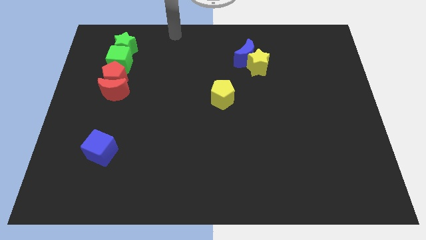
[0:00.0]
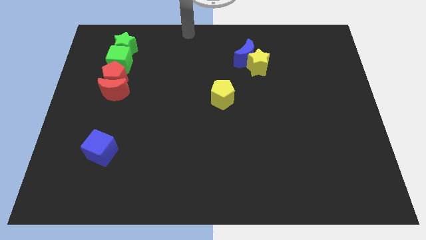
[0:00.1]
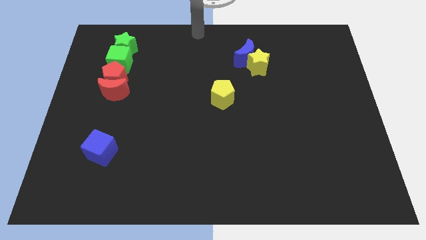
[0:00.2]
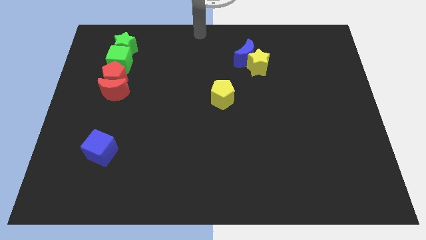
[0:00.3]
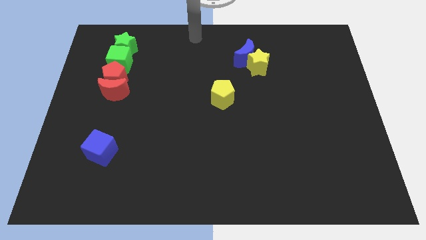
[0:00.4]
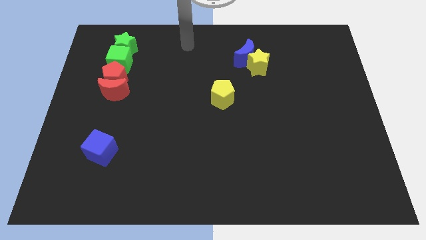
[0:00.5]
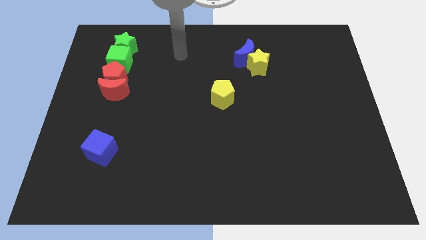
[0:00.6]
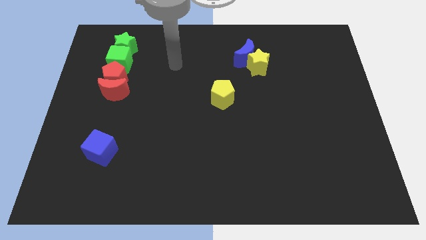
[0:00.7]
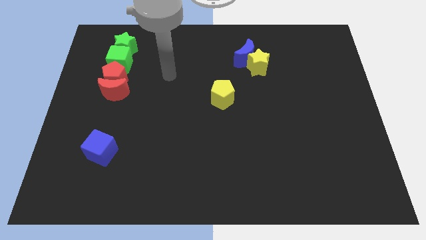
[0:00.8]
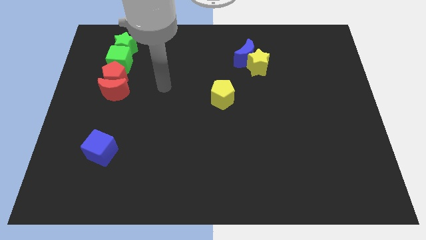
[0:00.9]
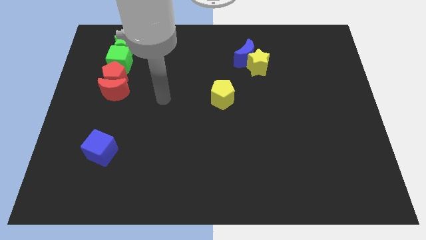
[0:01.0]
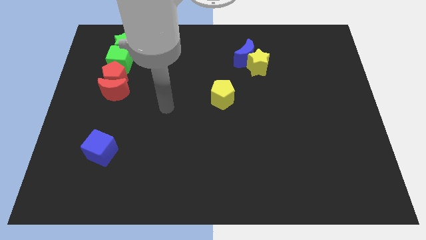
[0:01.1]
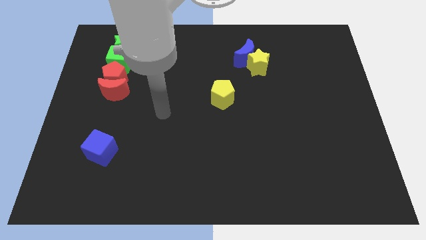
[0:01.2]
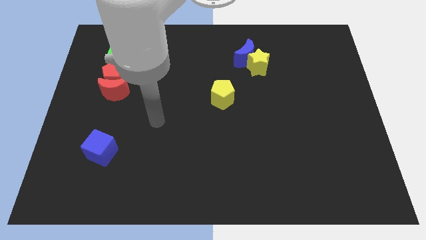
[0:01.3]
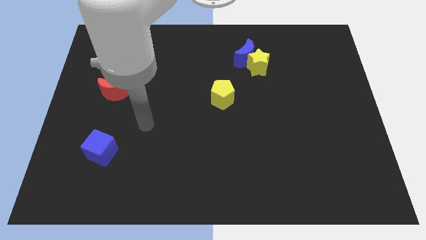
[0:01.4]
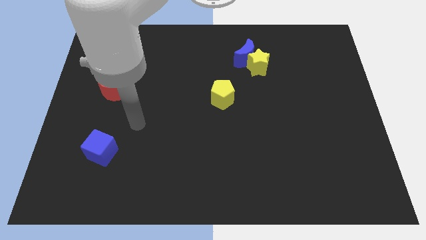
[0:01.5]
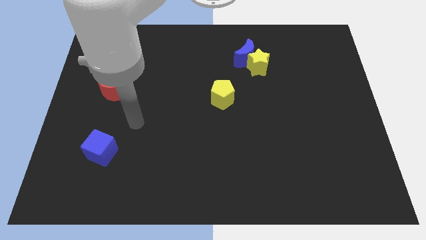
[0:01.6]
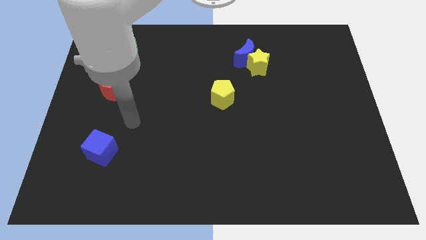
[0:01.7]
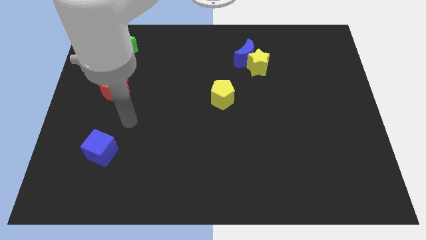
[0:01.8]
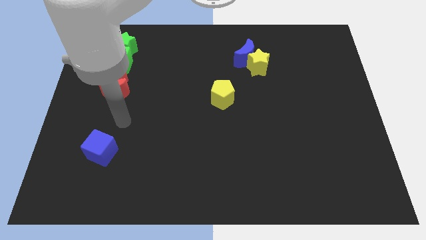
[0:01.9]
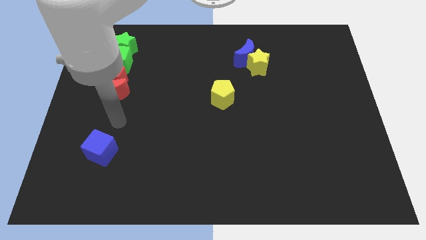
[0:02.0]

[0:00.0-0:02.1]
move your arm to the bottom of the red crescent

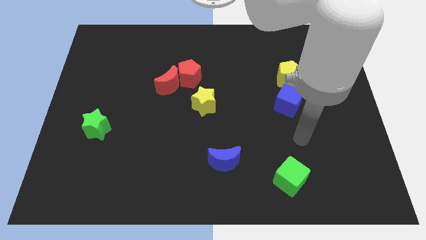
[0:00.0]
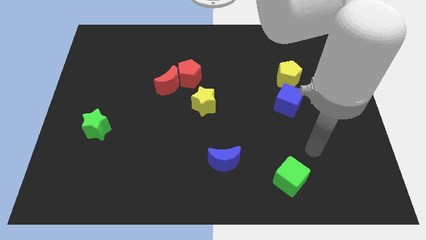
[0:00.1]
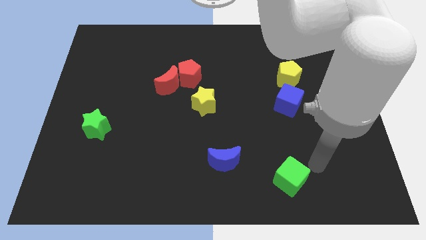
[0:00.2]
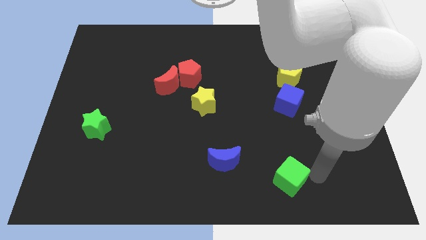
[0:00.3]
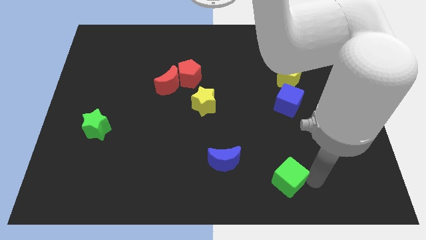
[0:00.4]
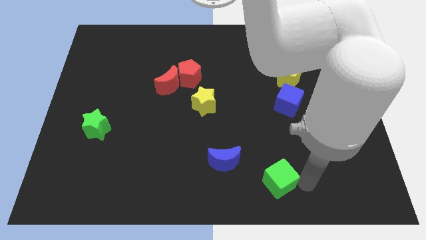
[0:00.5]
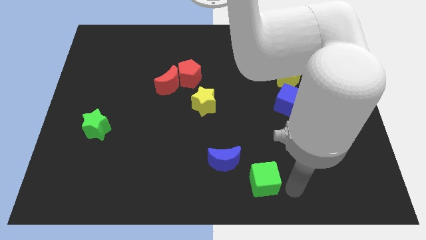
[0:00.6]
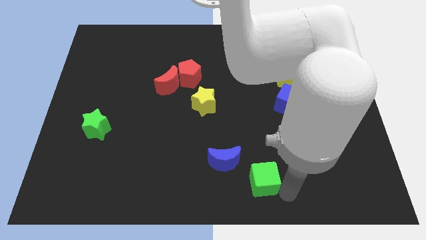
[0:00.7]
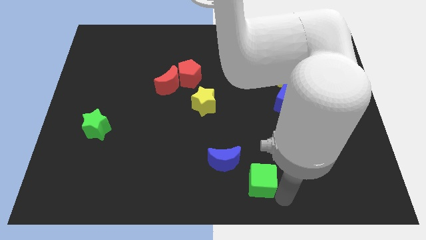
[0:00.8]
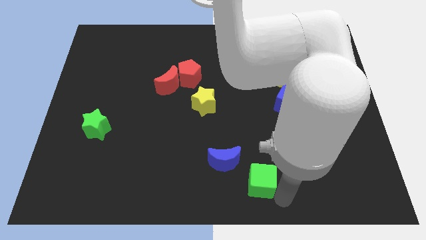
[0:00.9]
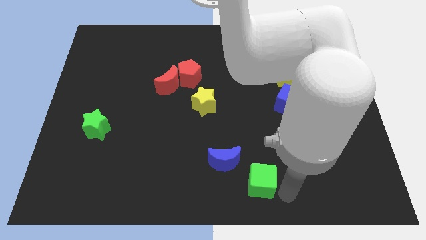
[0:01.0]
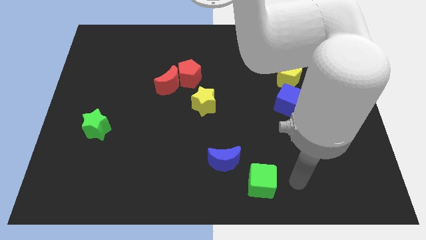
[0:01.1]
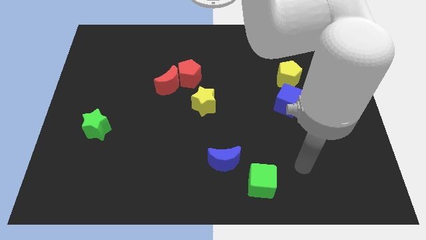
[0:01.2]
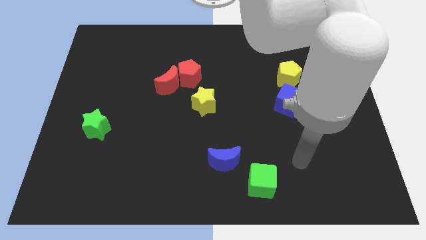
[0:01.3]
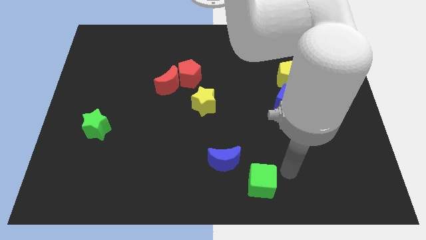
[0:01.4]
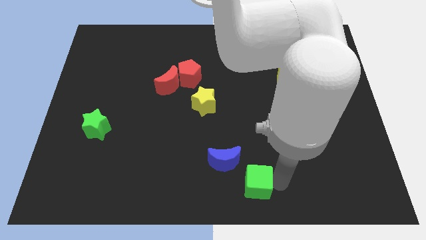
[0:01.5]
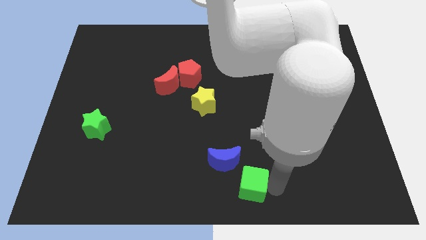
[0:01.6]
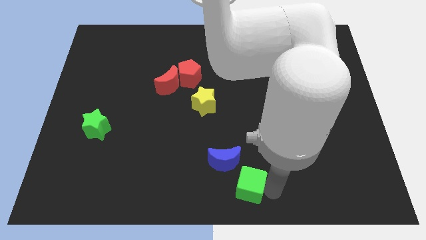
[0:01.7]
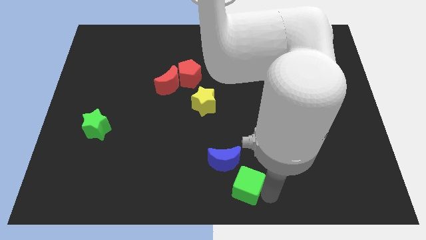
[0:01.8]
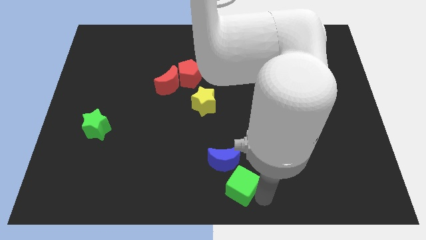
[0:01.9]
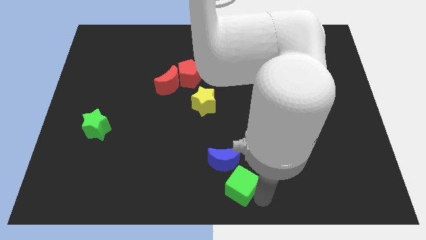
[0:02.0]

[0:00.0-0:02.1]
place the green cube at the bottom of the blue moon

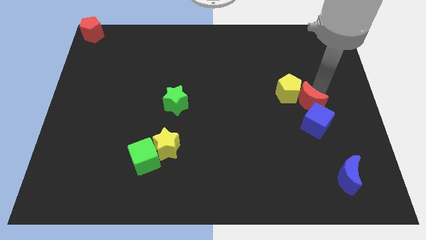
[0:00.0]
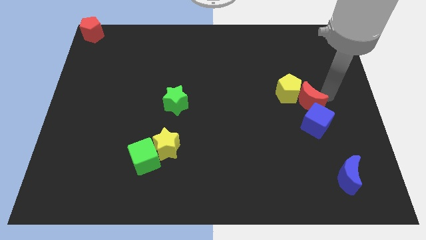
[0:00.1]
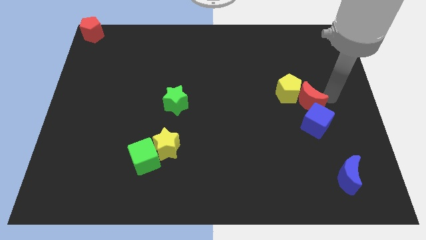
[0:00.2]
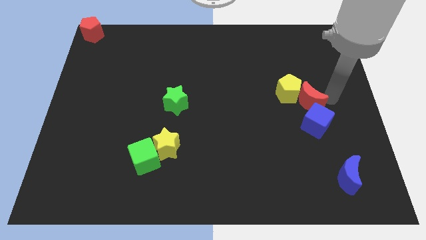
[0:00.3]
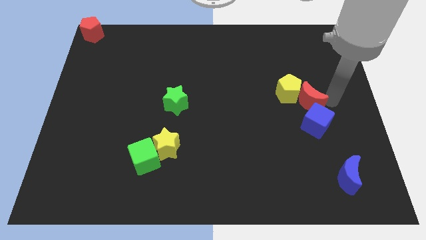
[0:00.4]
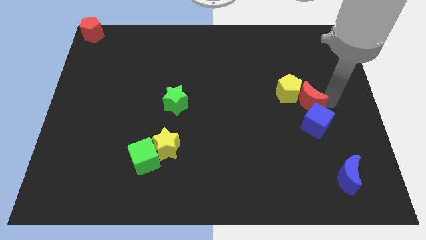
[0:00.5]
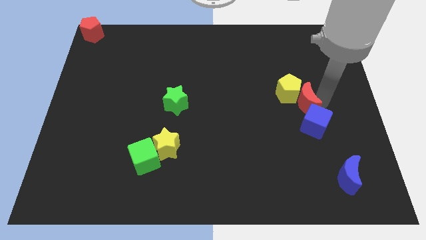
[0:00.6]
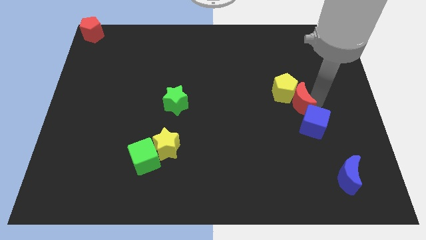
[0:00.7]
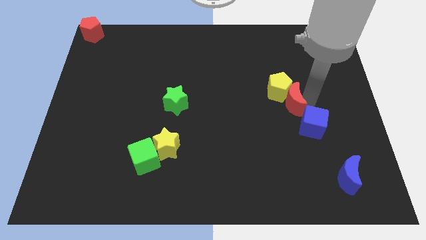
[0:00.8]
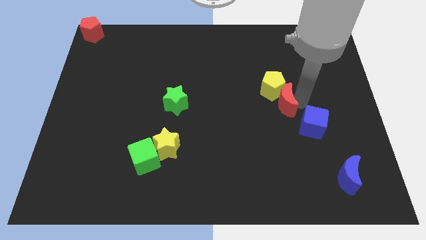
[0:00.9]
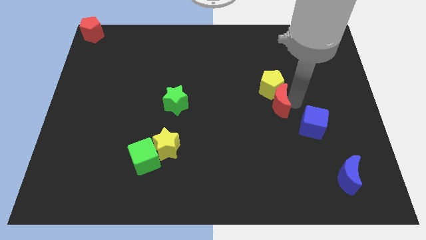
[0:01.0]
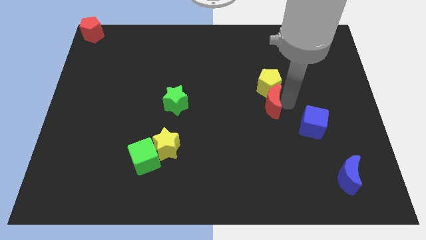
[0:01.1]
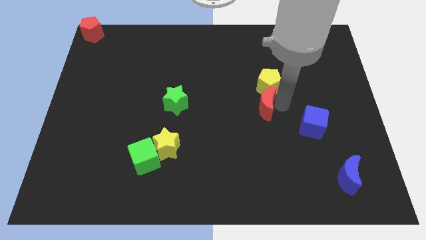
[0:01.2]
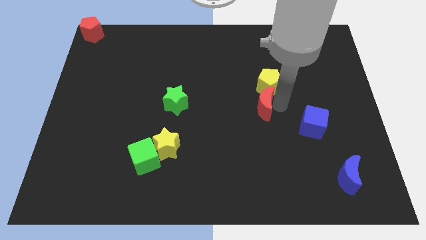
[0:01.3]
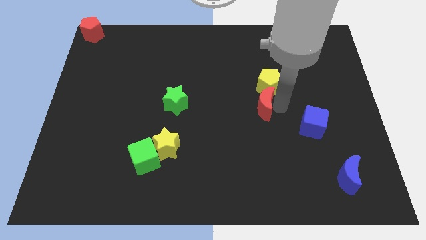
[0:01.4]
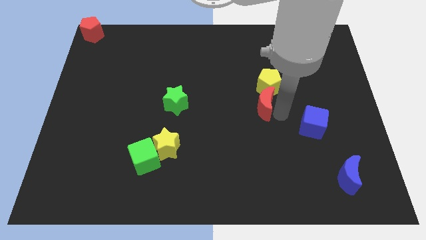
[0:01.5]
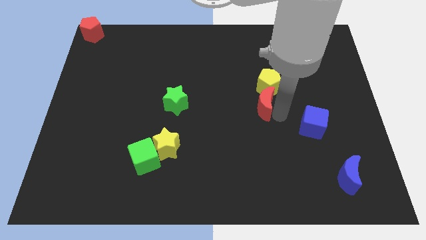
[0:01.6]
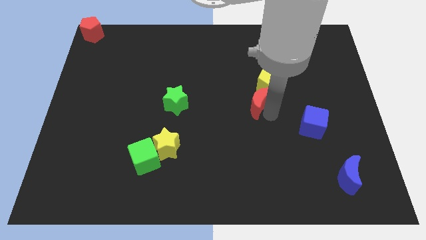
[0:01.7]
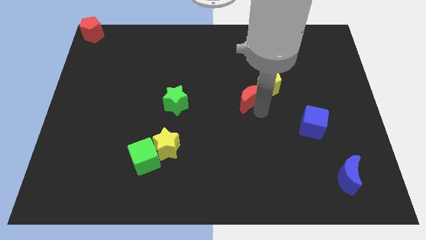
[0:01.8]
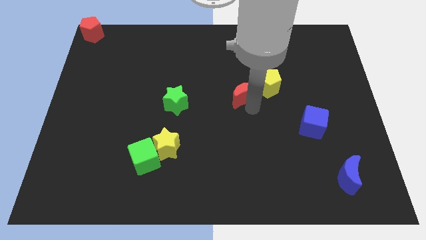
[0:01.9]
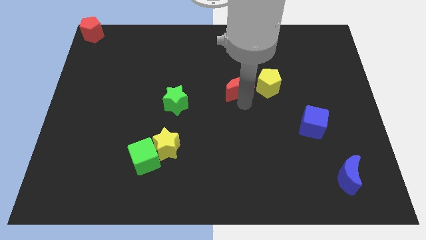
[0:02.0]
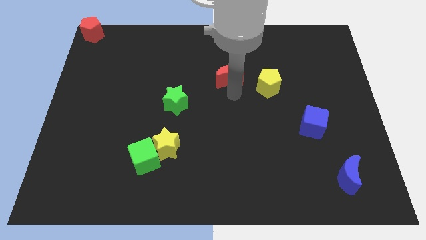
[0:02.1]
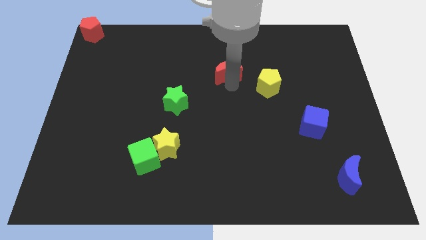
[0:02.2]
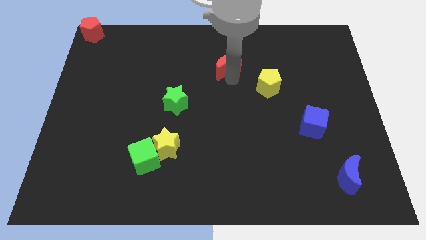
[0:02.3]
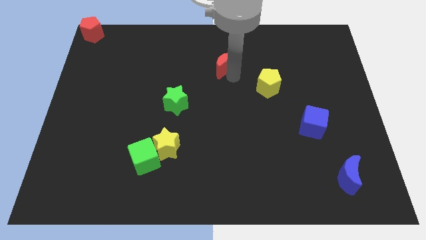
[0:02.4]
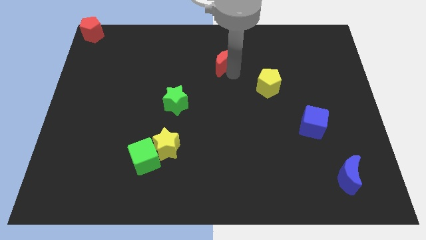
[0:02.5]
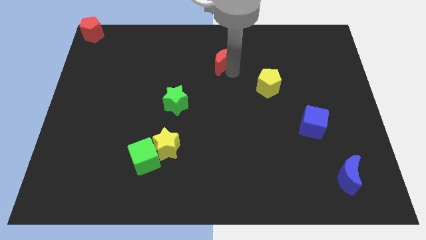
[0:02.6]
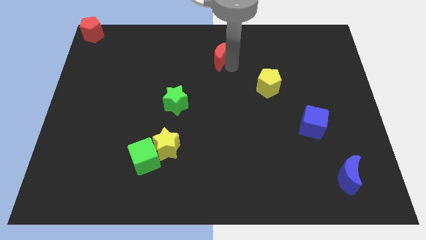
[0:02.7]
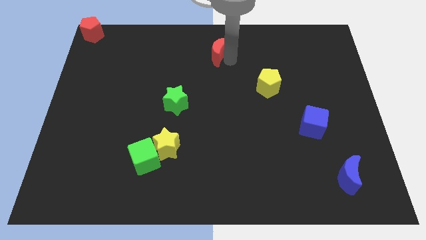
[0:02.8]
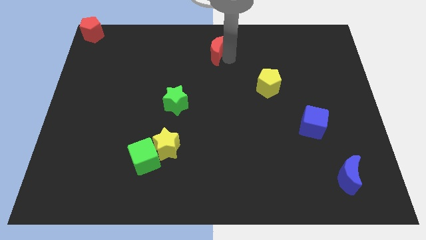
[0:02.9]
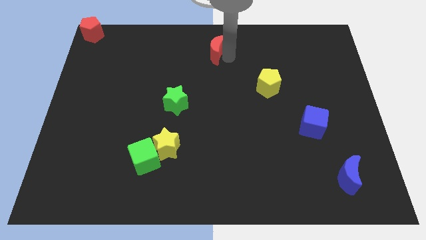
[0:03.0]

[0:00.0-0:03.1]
separate red moon from yellow pentagon

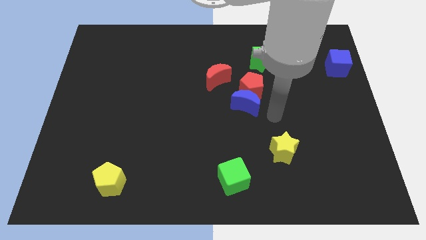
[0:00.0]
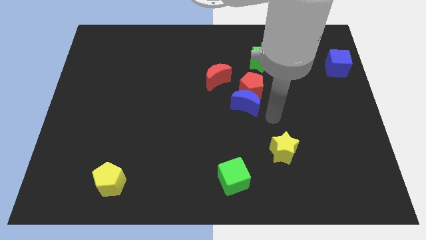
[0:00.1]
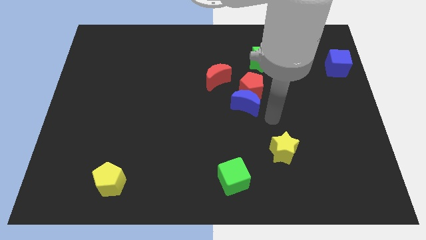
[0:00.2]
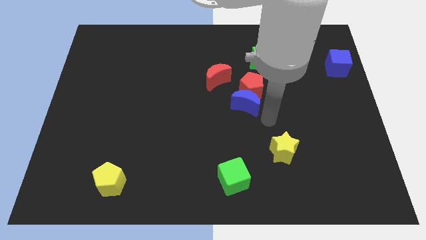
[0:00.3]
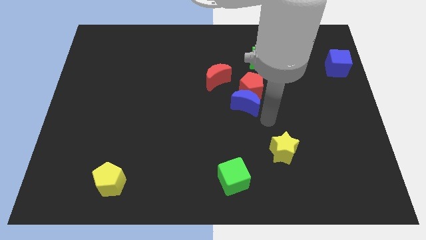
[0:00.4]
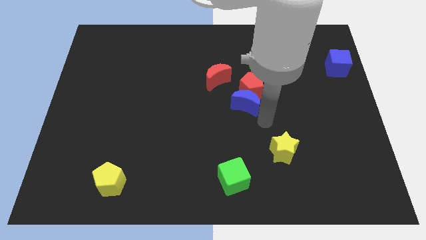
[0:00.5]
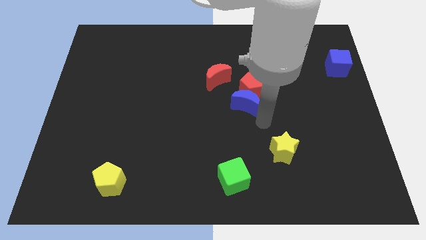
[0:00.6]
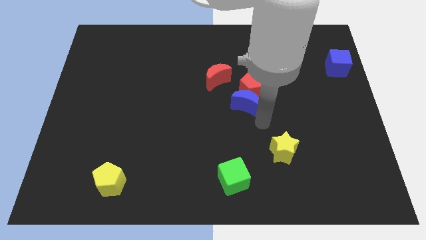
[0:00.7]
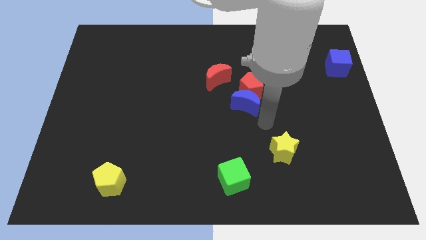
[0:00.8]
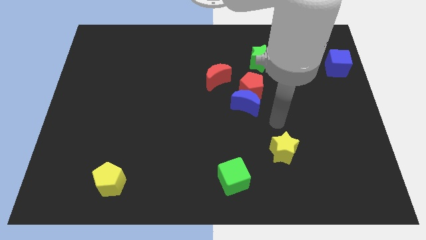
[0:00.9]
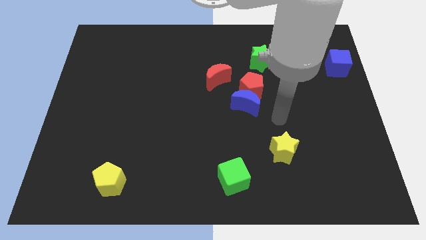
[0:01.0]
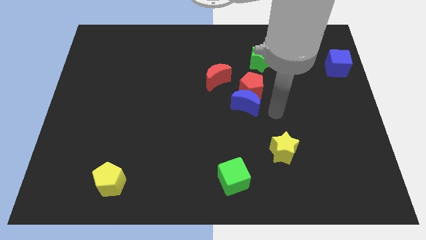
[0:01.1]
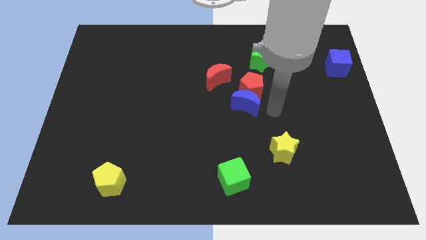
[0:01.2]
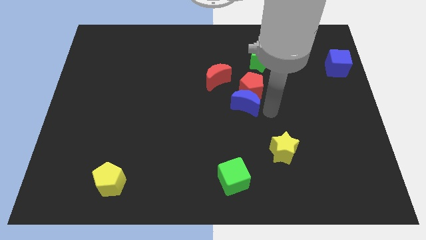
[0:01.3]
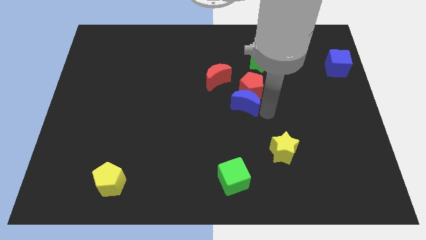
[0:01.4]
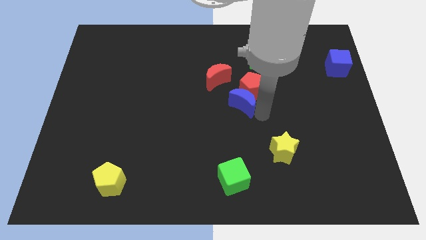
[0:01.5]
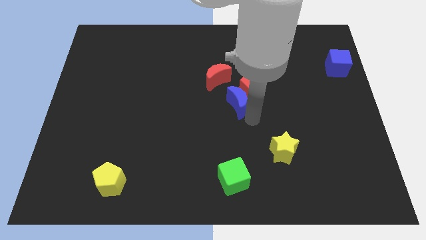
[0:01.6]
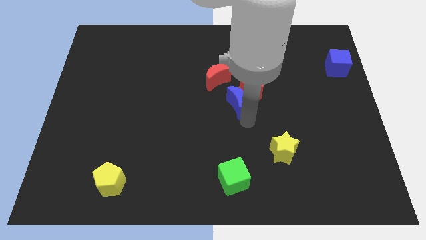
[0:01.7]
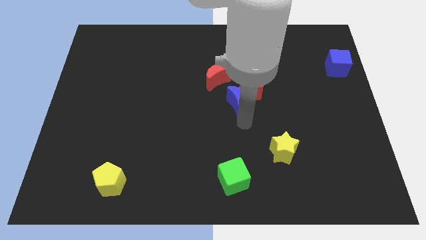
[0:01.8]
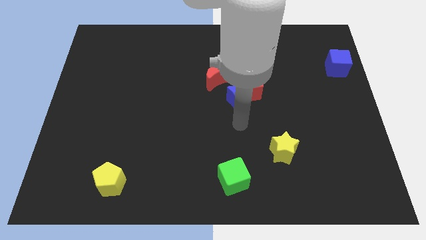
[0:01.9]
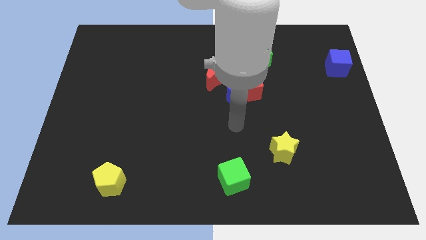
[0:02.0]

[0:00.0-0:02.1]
slide the blue moon slightly to the left
